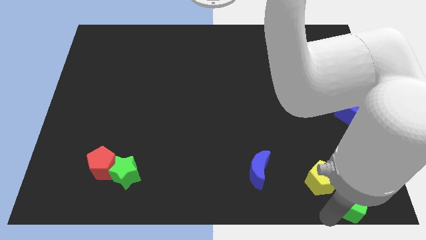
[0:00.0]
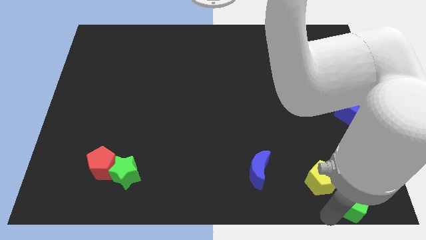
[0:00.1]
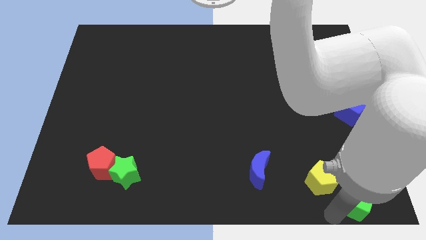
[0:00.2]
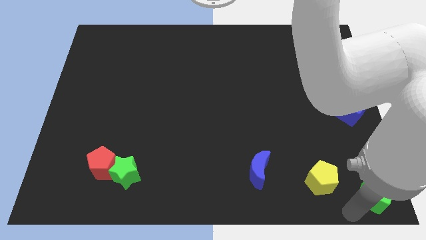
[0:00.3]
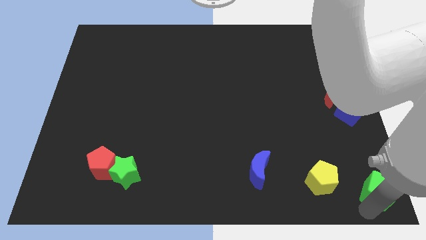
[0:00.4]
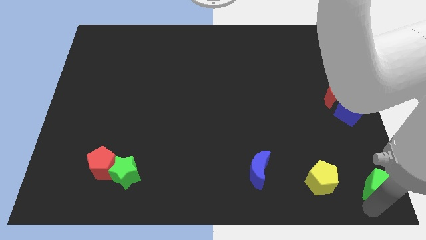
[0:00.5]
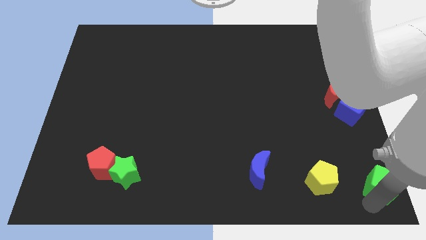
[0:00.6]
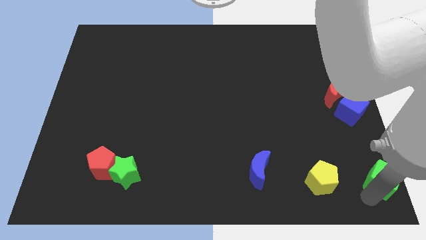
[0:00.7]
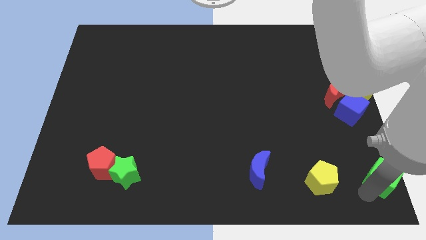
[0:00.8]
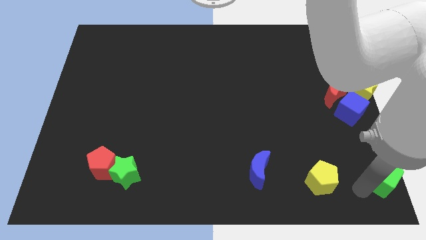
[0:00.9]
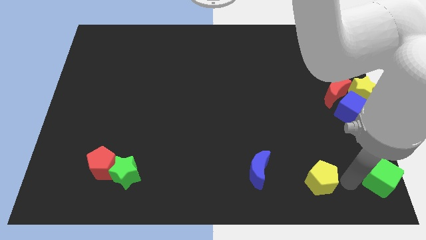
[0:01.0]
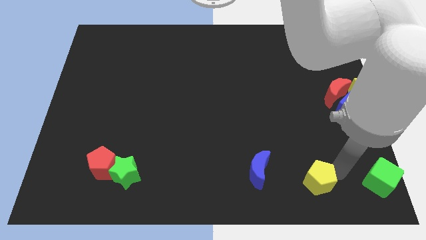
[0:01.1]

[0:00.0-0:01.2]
move the green cube to the bottom right of the board

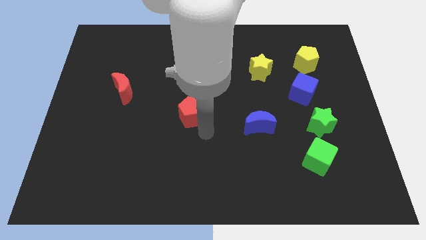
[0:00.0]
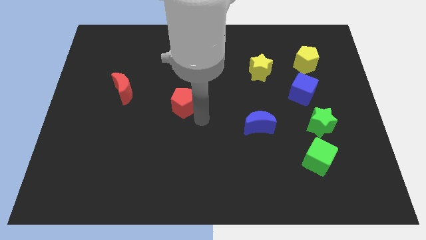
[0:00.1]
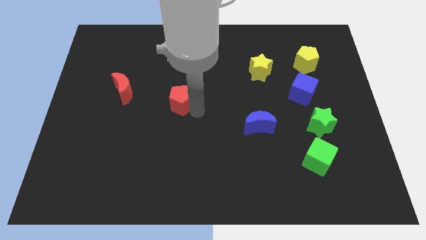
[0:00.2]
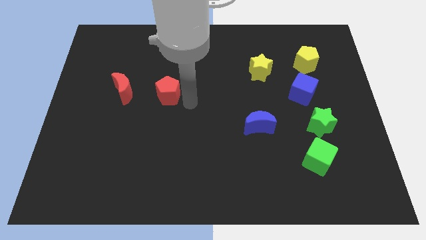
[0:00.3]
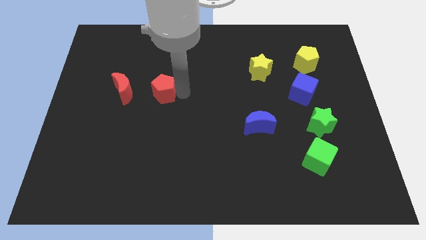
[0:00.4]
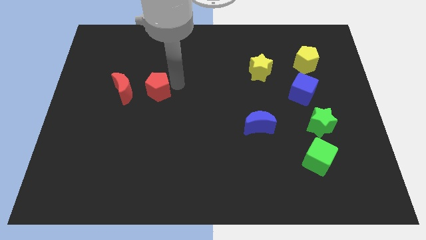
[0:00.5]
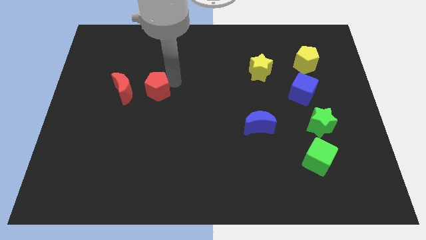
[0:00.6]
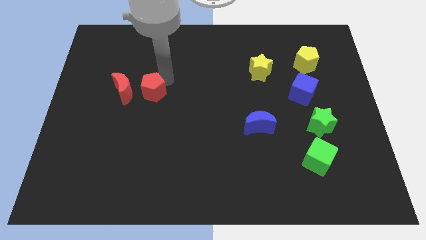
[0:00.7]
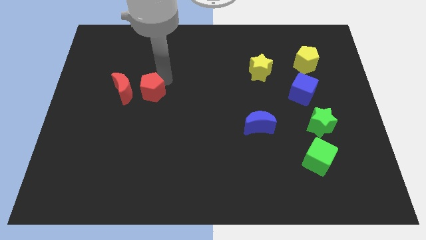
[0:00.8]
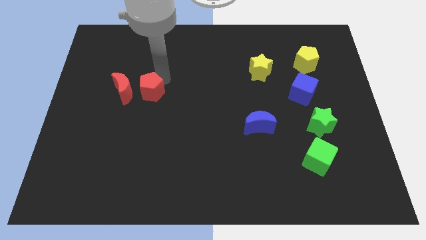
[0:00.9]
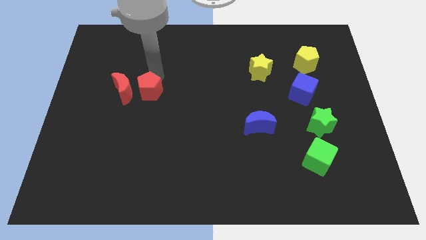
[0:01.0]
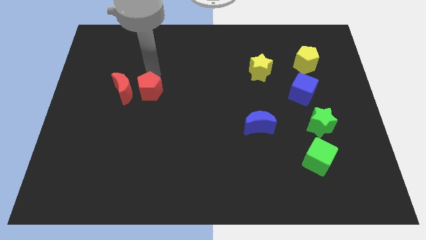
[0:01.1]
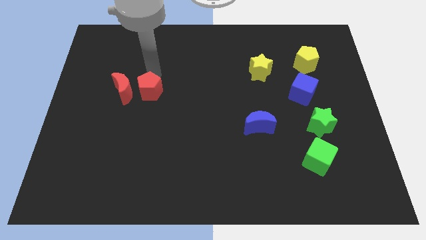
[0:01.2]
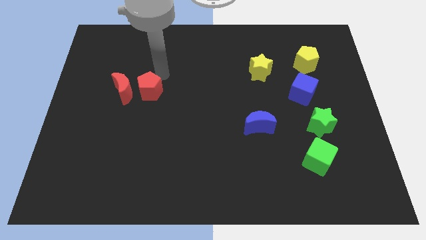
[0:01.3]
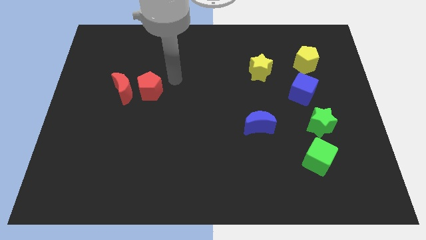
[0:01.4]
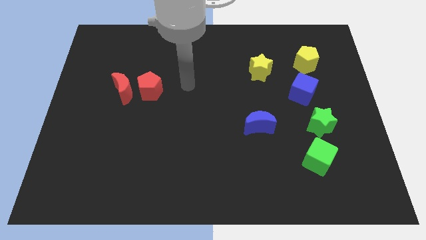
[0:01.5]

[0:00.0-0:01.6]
put the red pentagon to the right of the red crescent

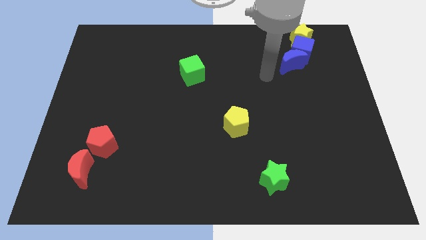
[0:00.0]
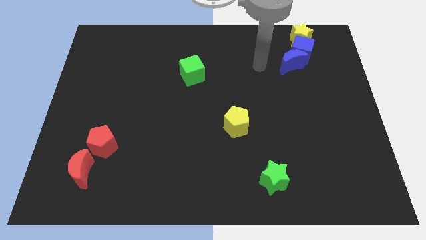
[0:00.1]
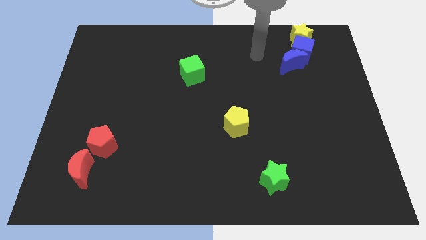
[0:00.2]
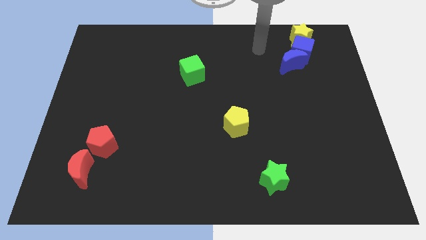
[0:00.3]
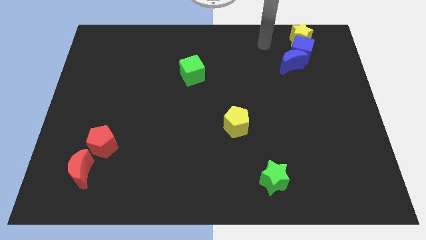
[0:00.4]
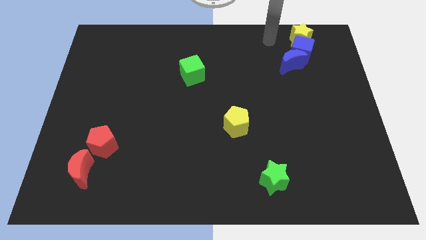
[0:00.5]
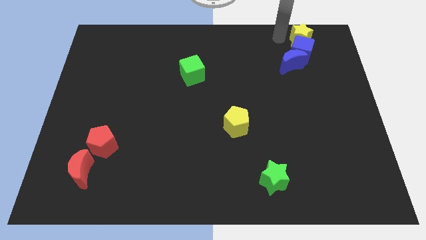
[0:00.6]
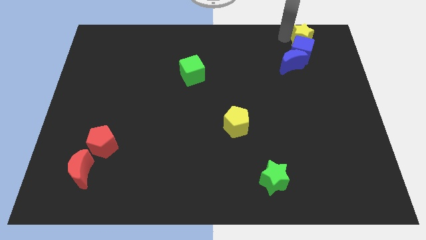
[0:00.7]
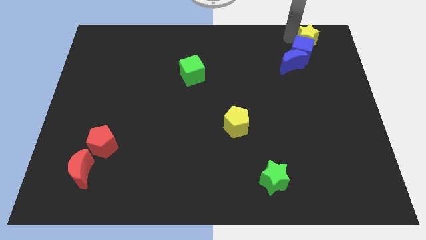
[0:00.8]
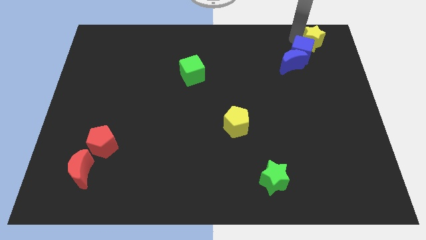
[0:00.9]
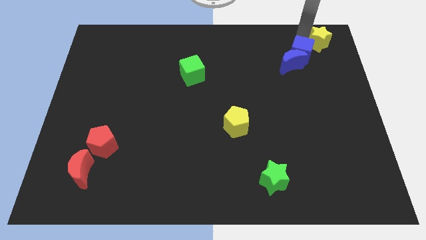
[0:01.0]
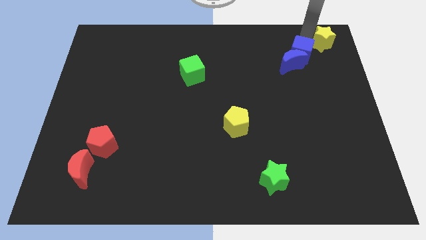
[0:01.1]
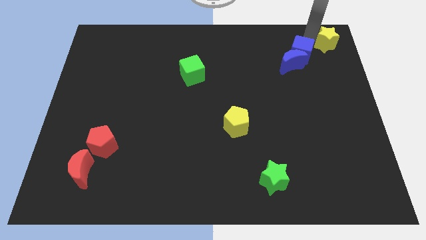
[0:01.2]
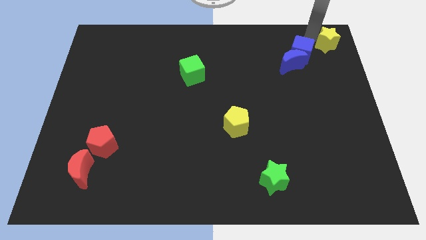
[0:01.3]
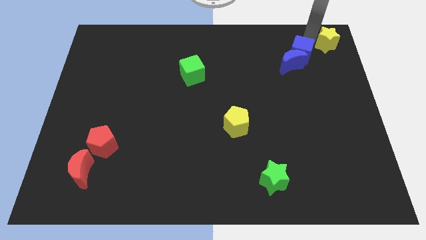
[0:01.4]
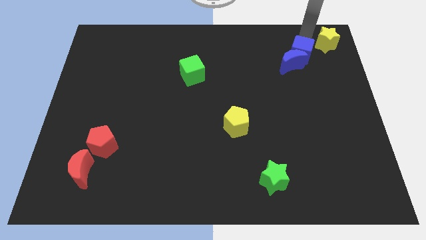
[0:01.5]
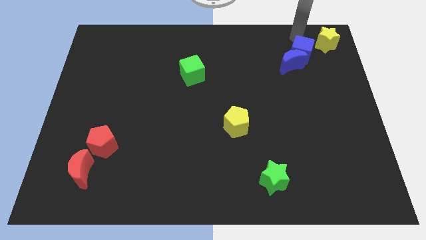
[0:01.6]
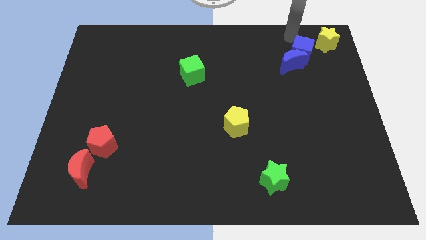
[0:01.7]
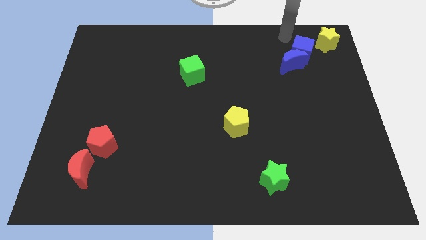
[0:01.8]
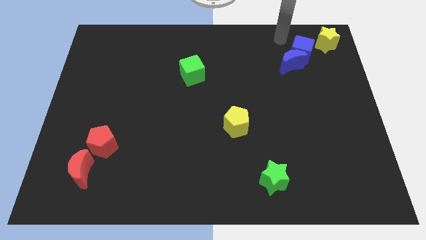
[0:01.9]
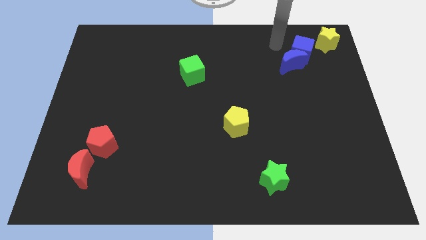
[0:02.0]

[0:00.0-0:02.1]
move yellow star to the top left corner

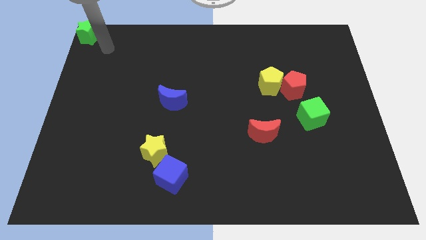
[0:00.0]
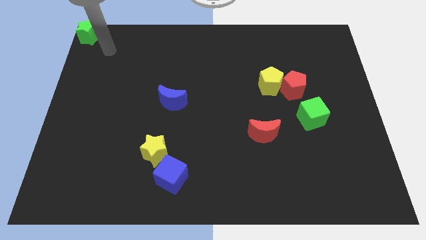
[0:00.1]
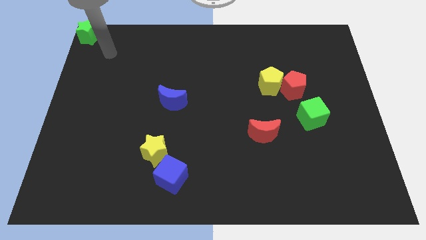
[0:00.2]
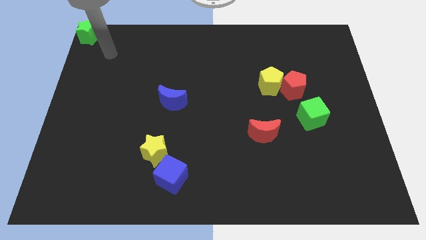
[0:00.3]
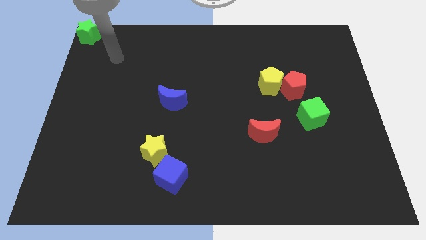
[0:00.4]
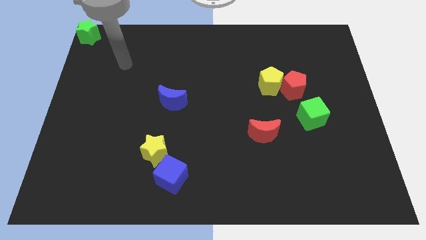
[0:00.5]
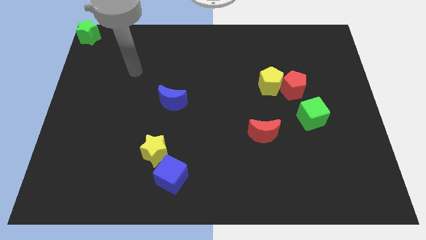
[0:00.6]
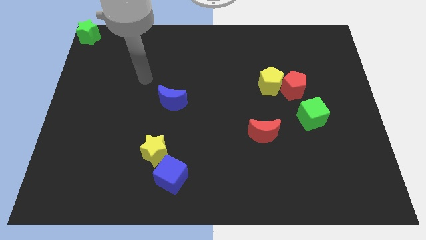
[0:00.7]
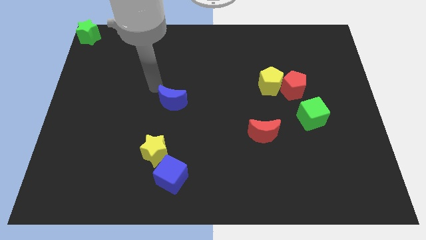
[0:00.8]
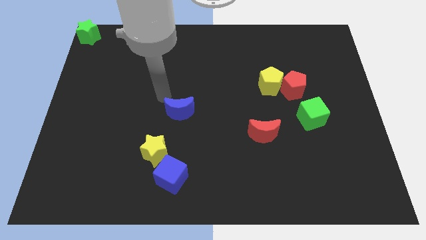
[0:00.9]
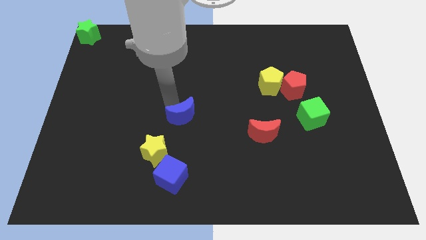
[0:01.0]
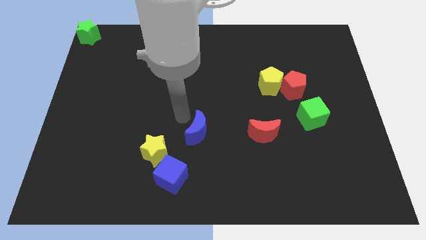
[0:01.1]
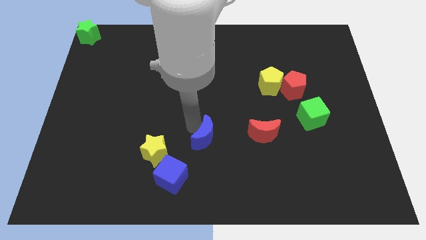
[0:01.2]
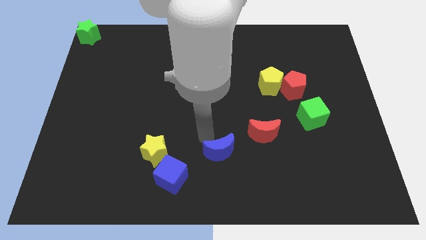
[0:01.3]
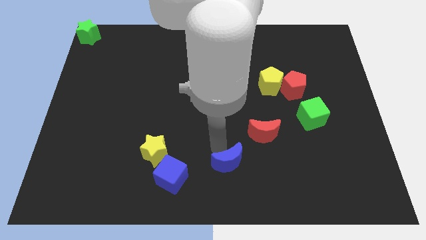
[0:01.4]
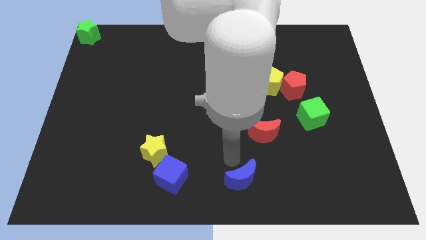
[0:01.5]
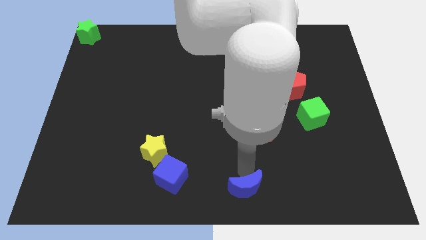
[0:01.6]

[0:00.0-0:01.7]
drag the blue crescent to the right side of the blue cube

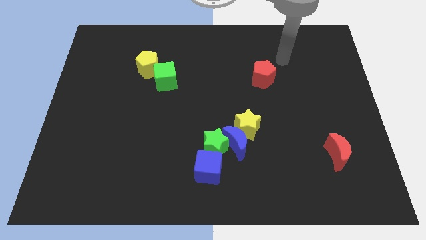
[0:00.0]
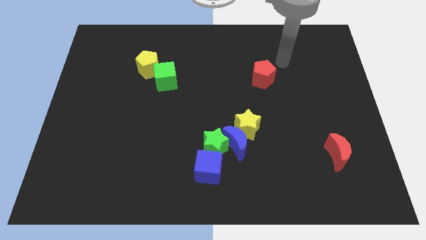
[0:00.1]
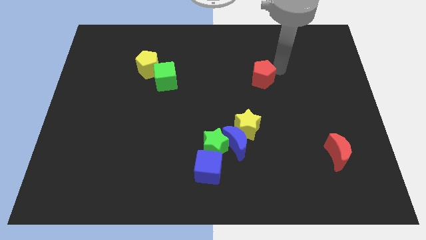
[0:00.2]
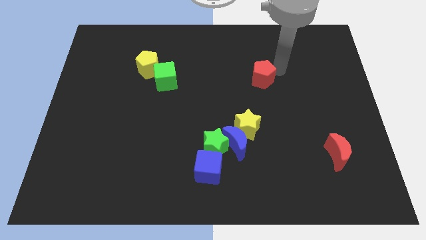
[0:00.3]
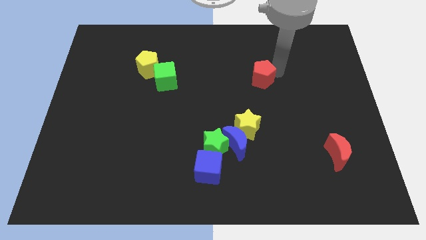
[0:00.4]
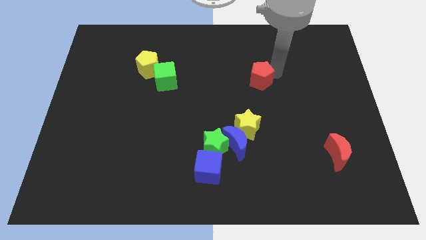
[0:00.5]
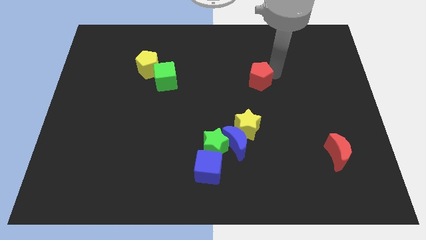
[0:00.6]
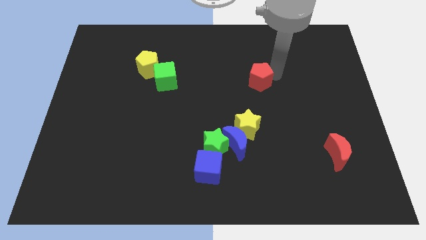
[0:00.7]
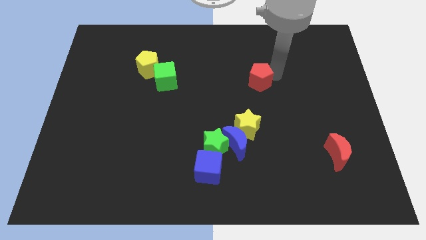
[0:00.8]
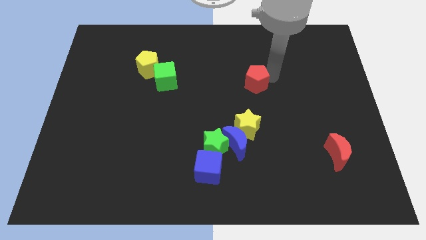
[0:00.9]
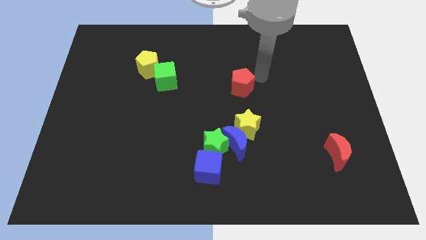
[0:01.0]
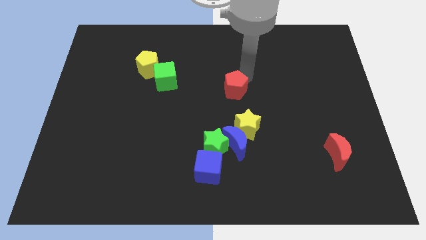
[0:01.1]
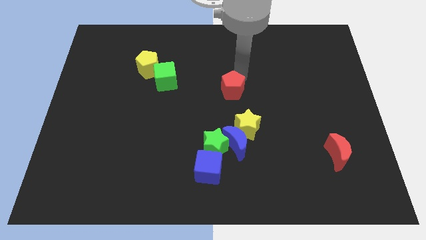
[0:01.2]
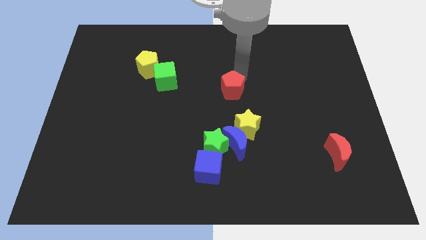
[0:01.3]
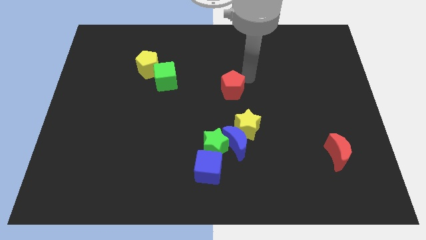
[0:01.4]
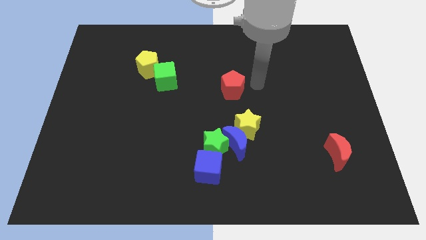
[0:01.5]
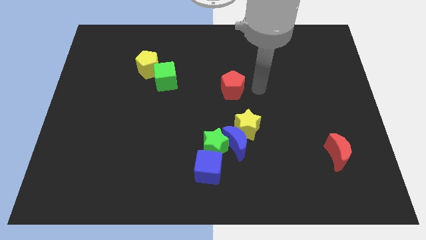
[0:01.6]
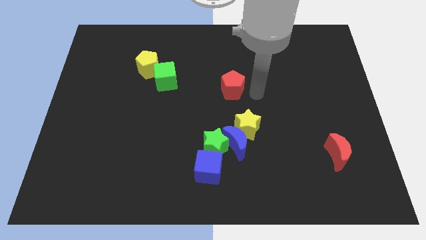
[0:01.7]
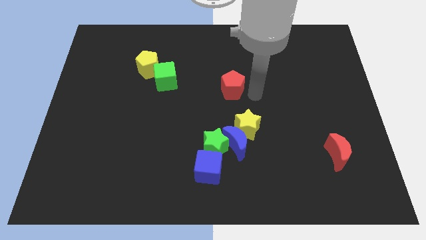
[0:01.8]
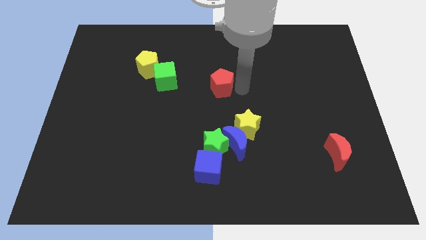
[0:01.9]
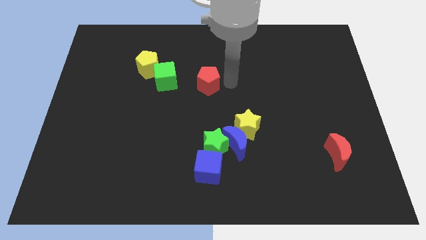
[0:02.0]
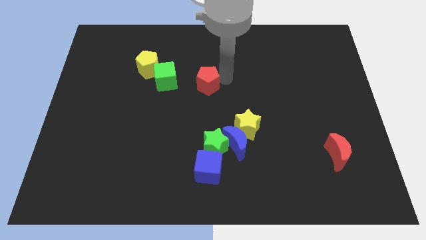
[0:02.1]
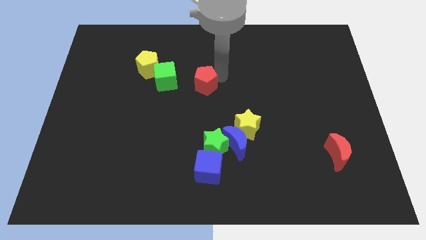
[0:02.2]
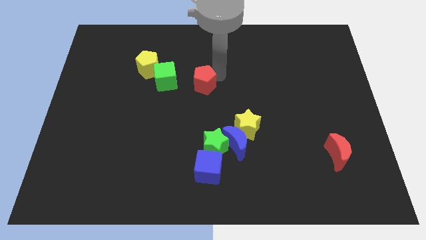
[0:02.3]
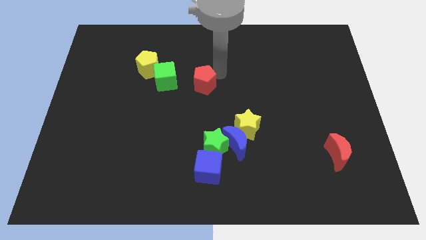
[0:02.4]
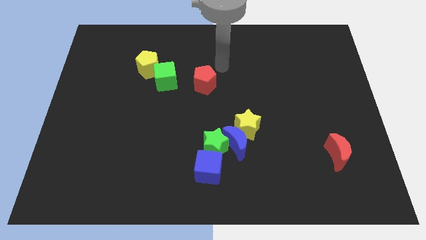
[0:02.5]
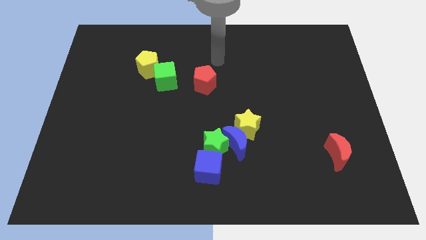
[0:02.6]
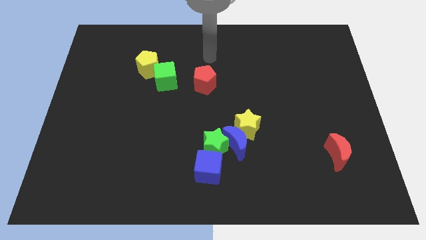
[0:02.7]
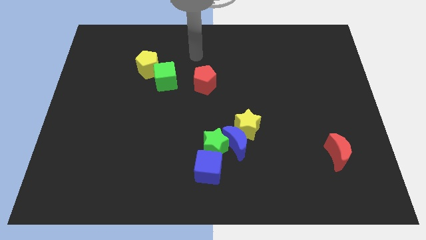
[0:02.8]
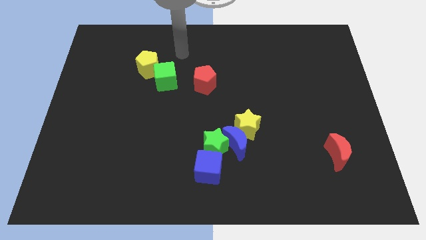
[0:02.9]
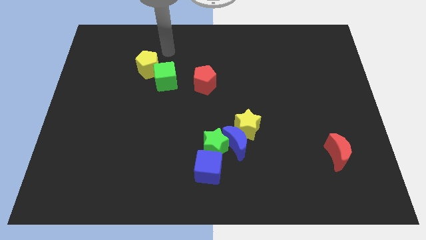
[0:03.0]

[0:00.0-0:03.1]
drag the red pentagon diagonally top left to the yellow star
